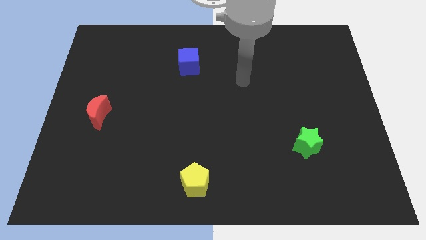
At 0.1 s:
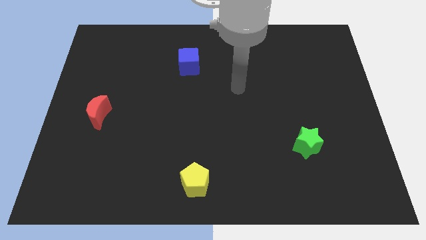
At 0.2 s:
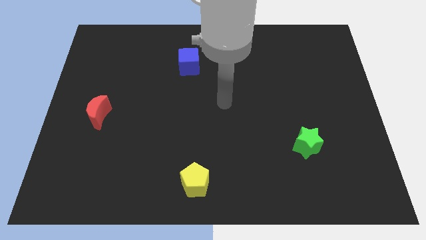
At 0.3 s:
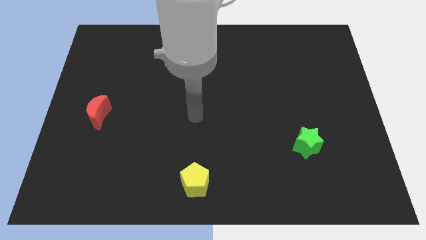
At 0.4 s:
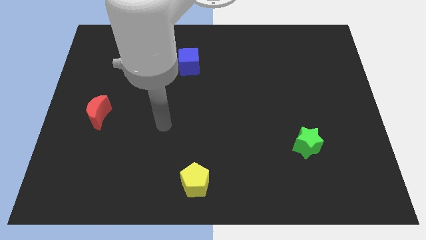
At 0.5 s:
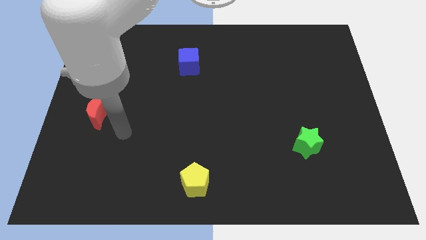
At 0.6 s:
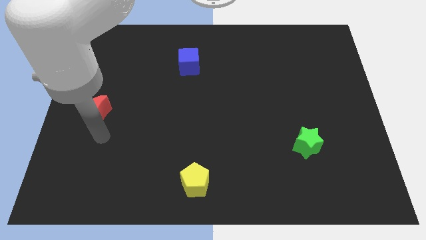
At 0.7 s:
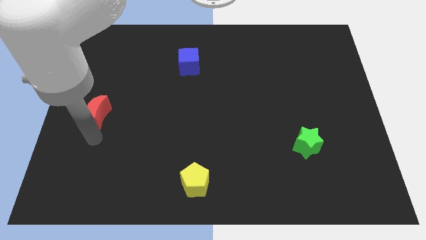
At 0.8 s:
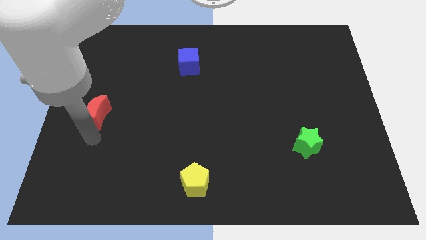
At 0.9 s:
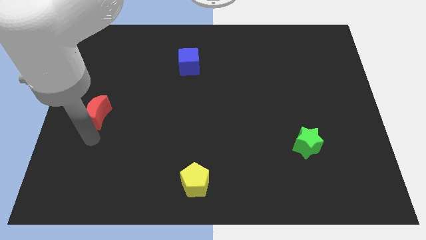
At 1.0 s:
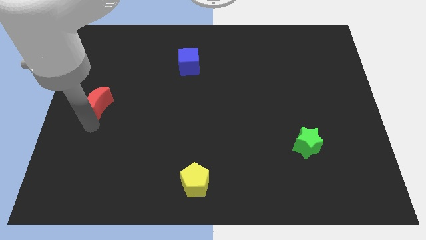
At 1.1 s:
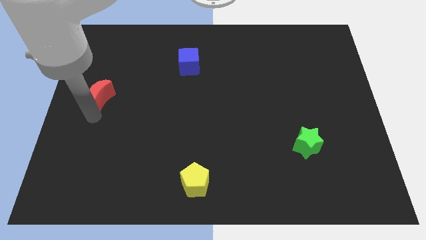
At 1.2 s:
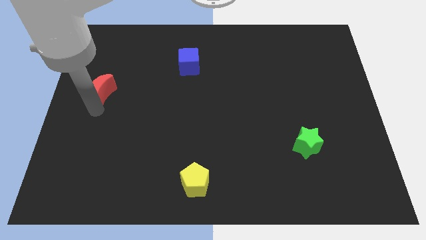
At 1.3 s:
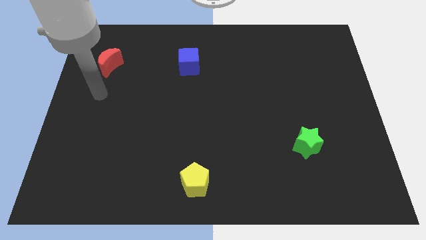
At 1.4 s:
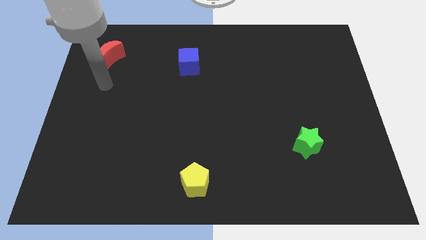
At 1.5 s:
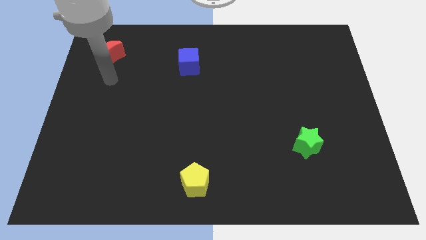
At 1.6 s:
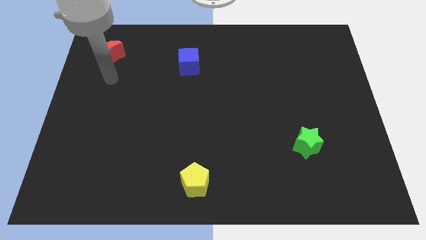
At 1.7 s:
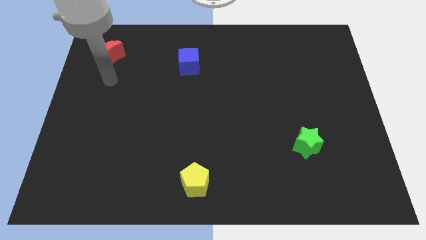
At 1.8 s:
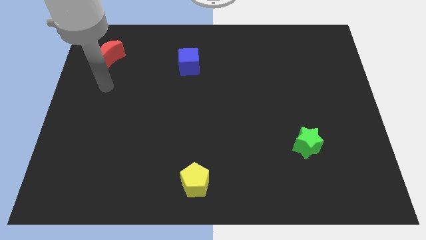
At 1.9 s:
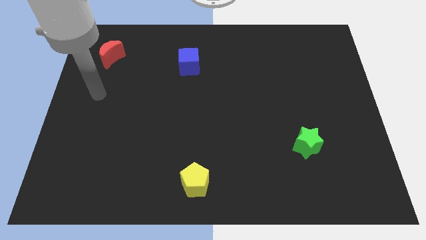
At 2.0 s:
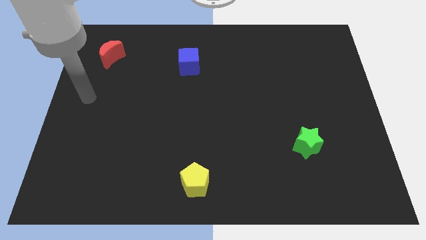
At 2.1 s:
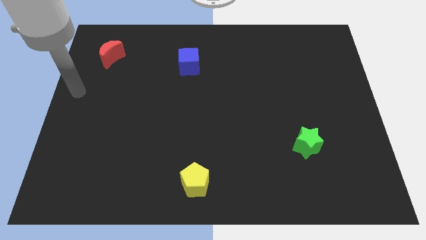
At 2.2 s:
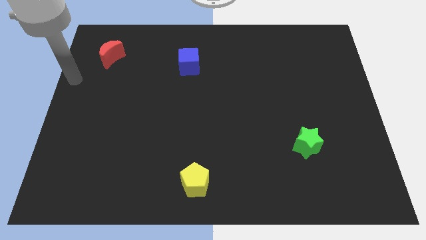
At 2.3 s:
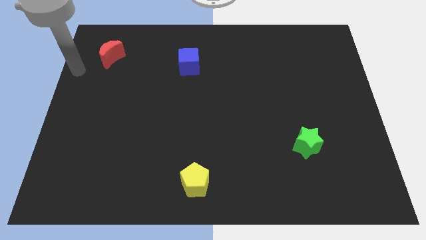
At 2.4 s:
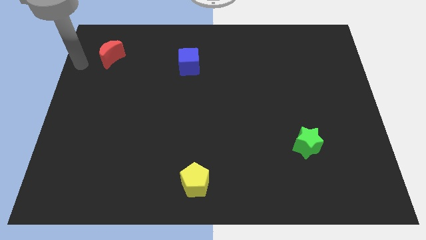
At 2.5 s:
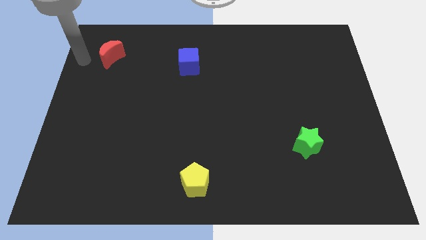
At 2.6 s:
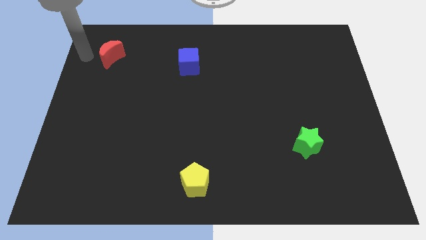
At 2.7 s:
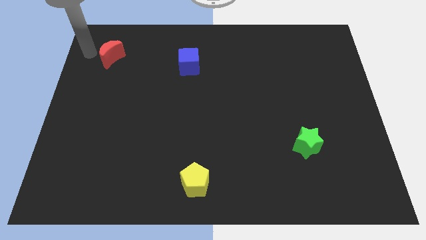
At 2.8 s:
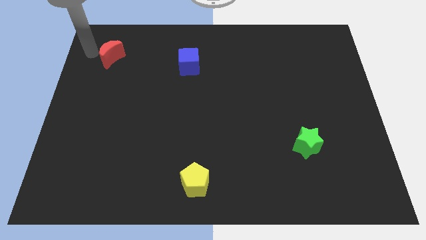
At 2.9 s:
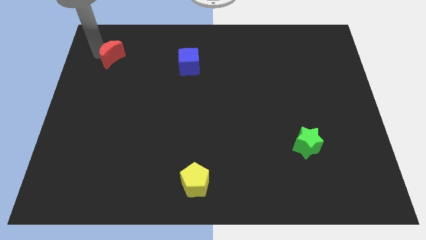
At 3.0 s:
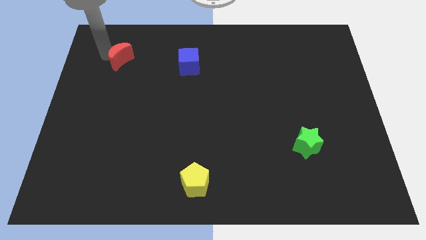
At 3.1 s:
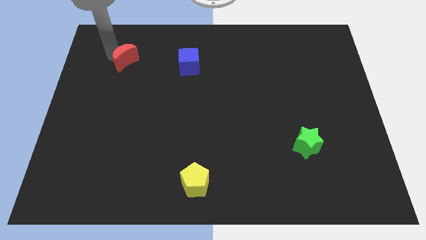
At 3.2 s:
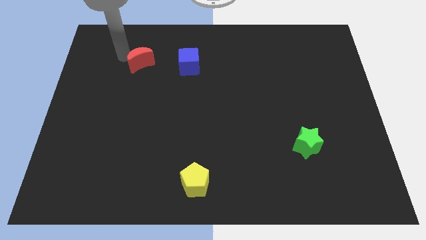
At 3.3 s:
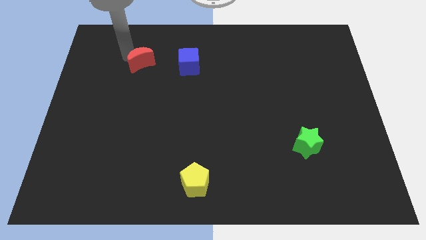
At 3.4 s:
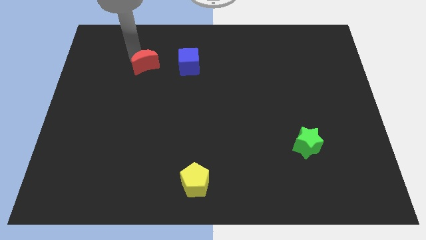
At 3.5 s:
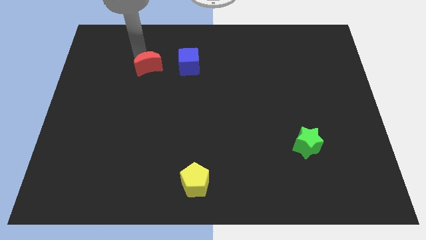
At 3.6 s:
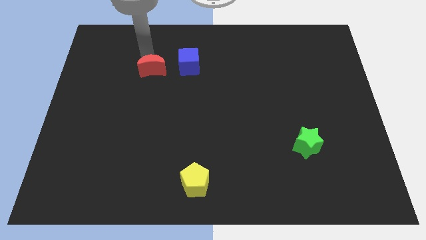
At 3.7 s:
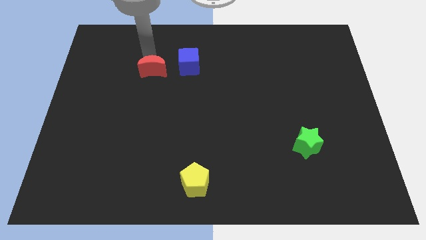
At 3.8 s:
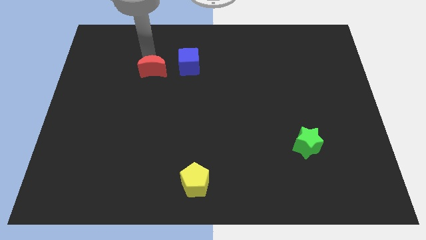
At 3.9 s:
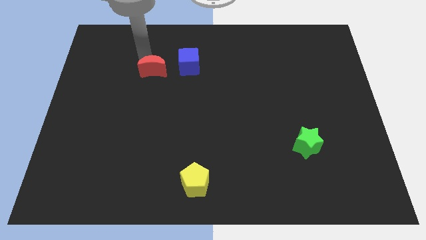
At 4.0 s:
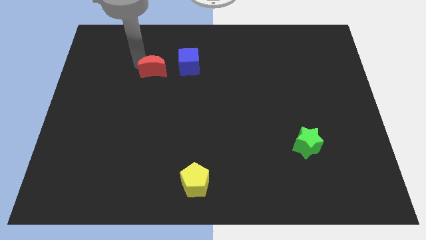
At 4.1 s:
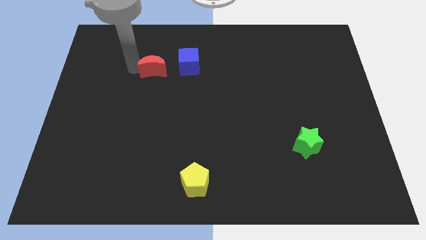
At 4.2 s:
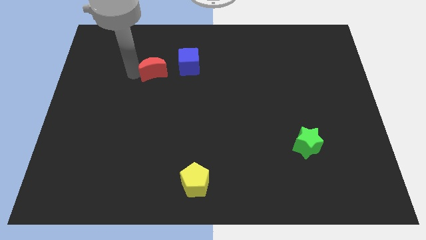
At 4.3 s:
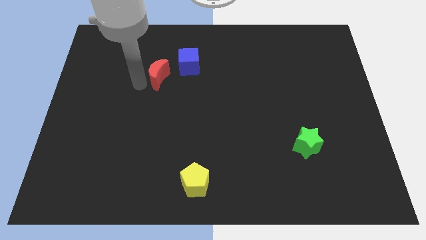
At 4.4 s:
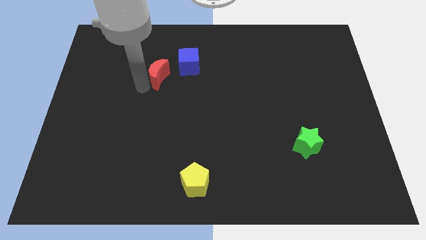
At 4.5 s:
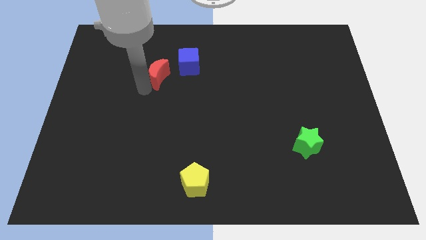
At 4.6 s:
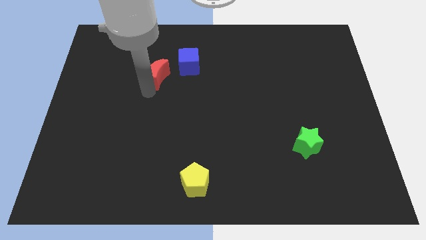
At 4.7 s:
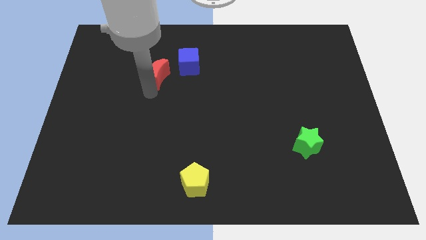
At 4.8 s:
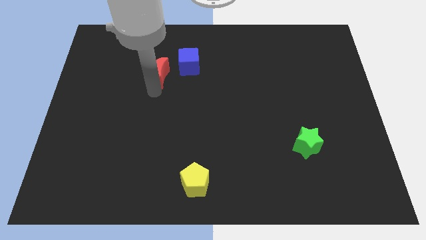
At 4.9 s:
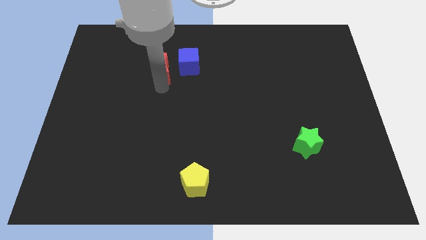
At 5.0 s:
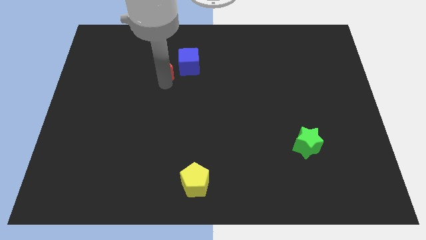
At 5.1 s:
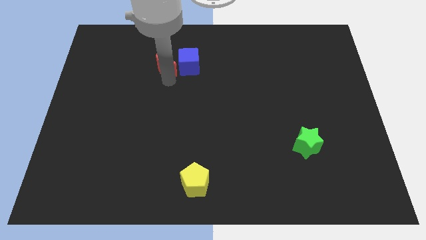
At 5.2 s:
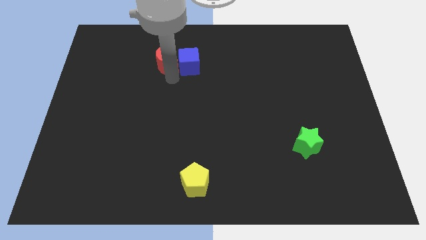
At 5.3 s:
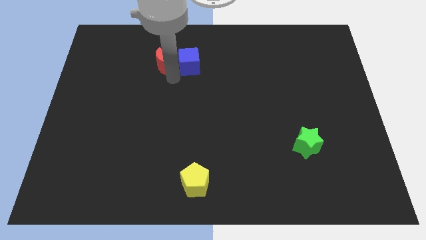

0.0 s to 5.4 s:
slide the red moon close to the blue cube

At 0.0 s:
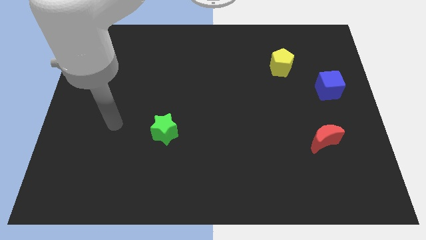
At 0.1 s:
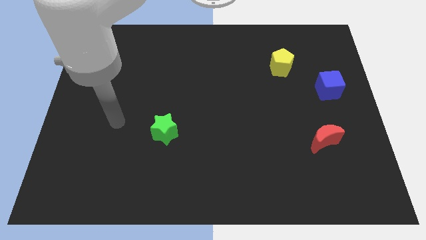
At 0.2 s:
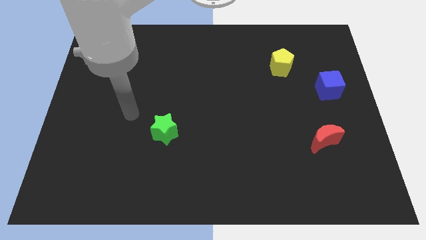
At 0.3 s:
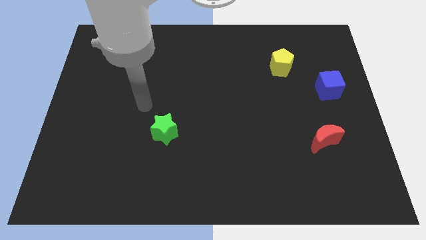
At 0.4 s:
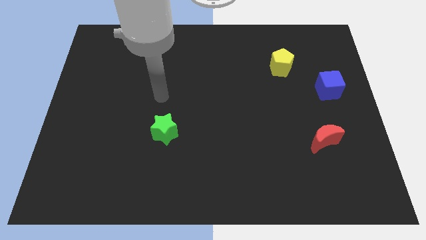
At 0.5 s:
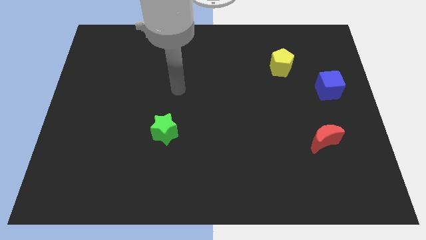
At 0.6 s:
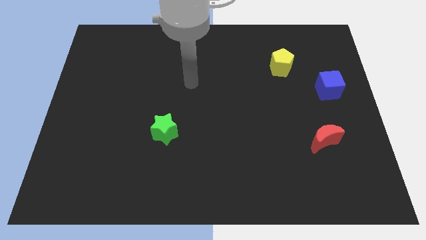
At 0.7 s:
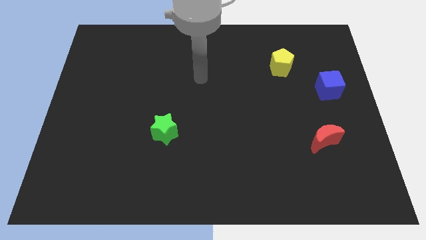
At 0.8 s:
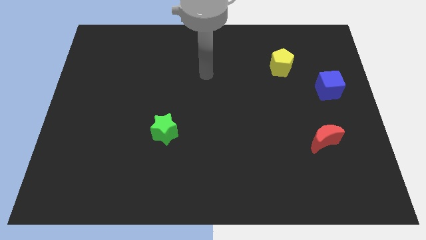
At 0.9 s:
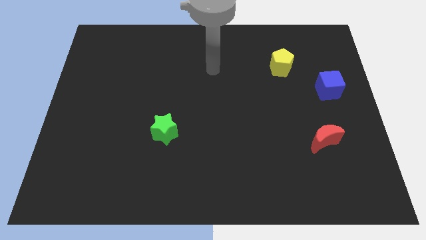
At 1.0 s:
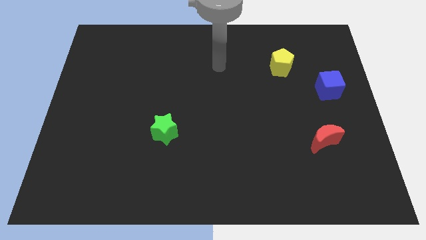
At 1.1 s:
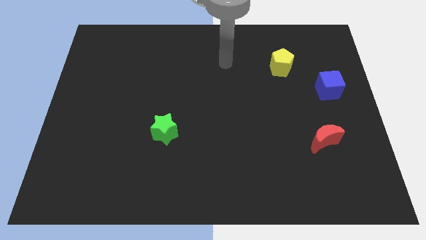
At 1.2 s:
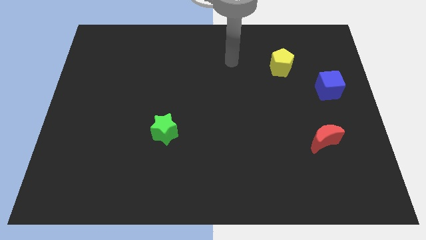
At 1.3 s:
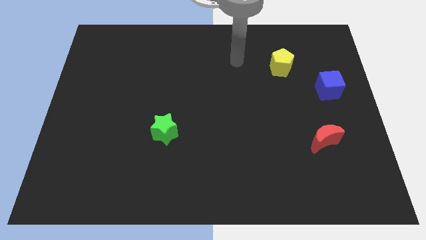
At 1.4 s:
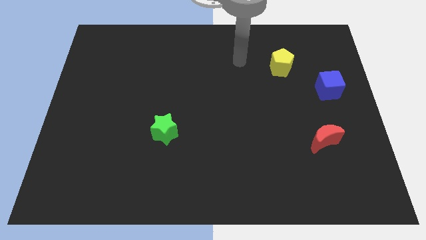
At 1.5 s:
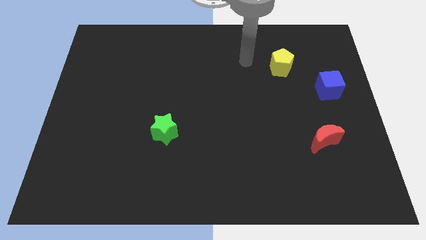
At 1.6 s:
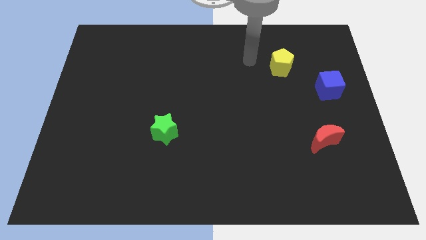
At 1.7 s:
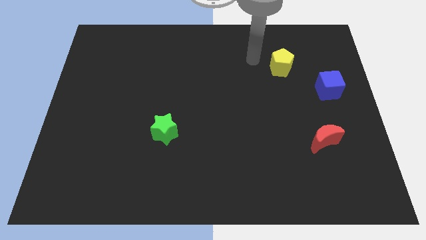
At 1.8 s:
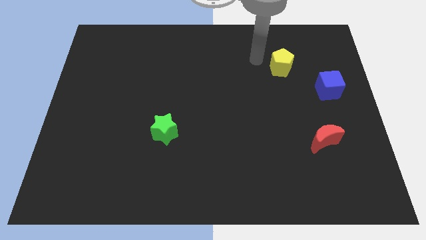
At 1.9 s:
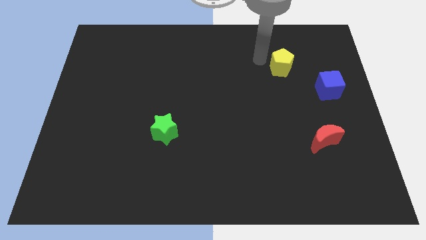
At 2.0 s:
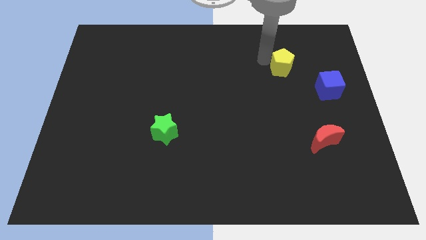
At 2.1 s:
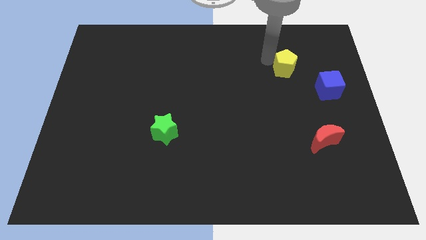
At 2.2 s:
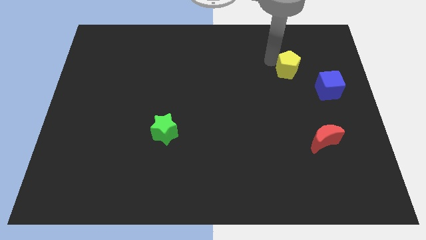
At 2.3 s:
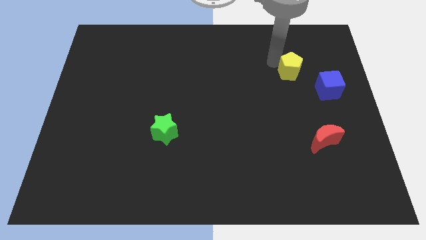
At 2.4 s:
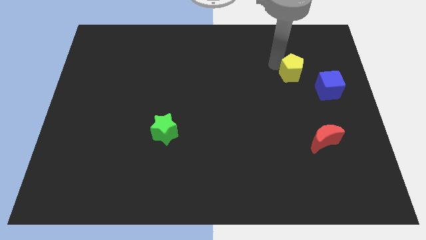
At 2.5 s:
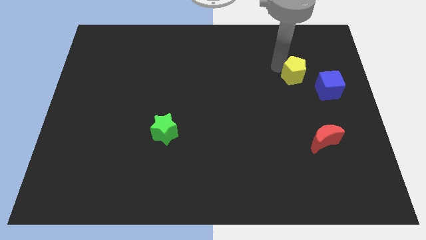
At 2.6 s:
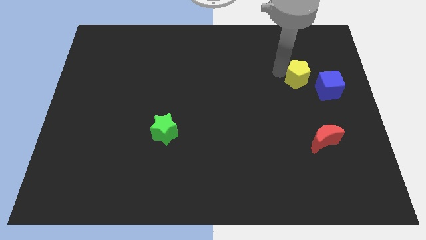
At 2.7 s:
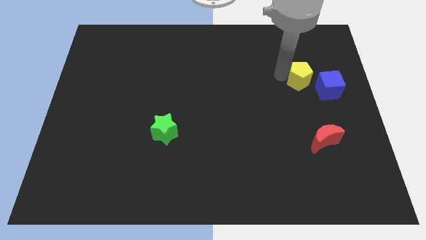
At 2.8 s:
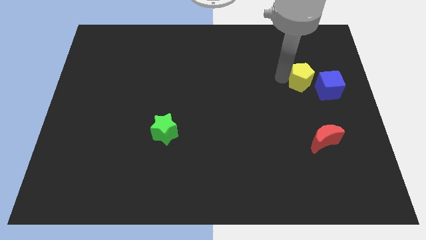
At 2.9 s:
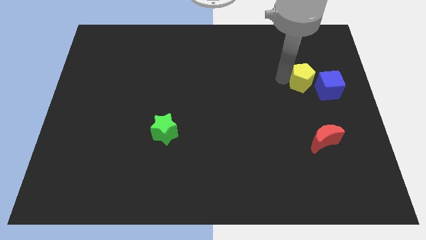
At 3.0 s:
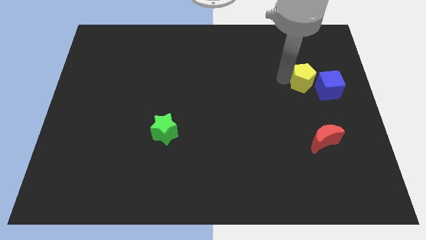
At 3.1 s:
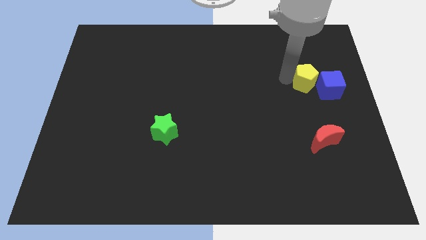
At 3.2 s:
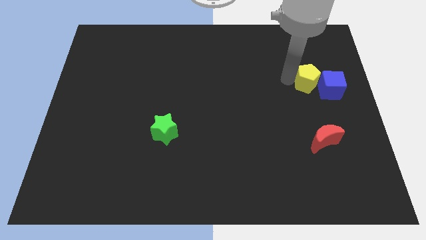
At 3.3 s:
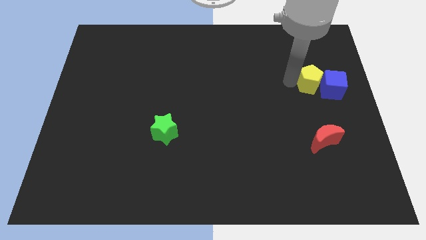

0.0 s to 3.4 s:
put the yellow block close to the blue cube
